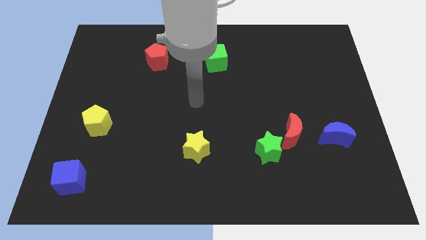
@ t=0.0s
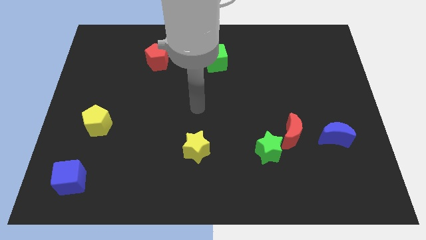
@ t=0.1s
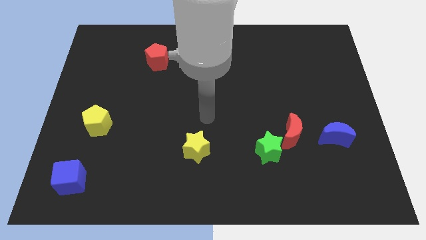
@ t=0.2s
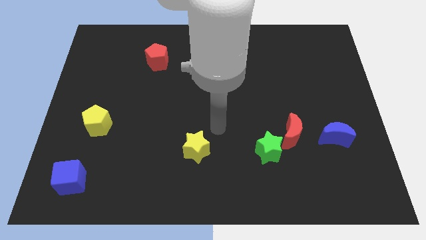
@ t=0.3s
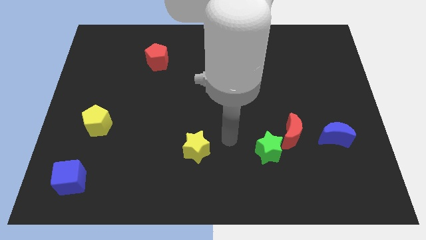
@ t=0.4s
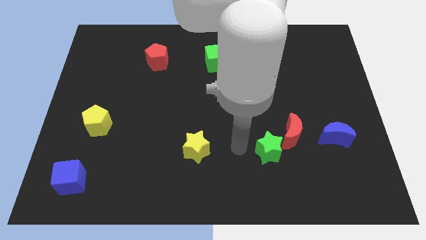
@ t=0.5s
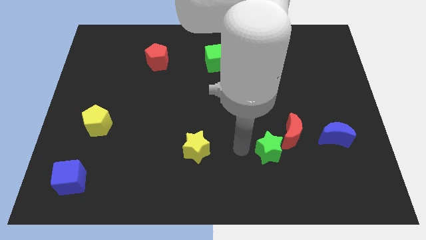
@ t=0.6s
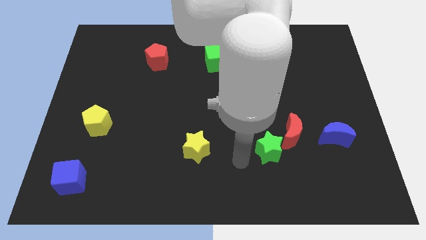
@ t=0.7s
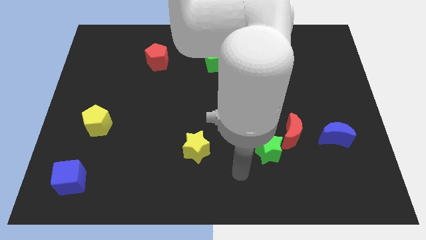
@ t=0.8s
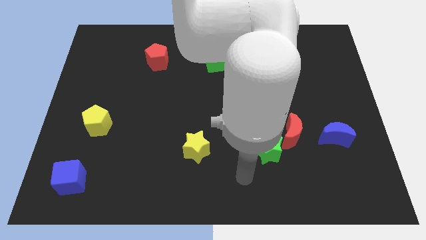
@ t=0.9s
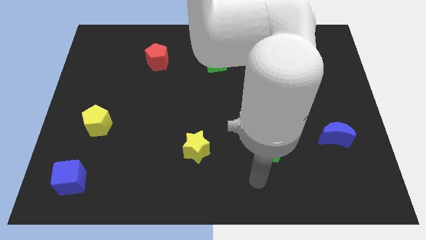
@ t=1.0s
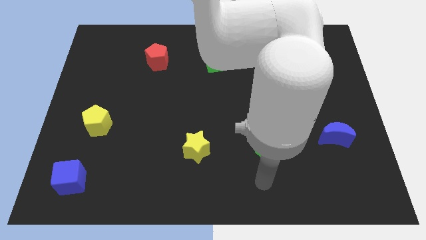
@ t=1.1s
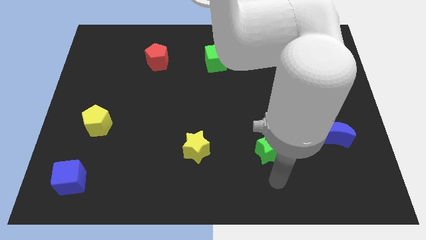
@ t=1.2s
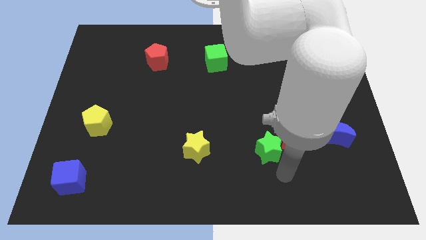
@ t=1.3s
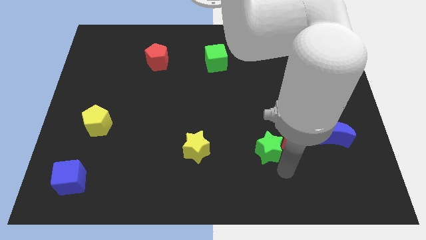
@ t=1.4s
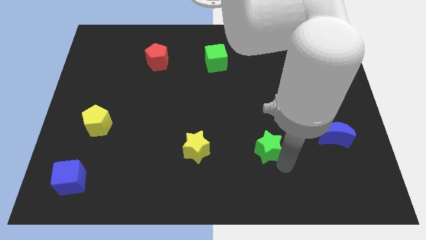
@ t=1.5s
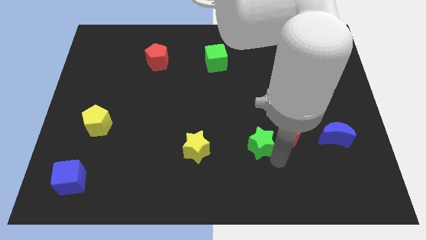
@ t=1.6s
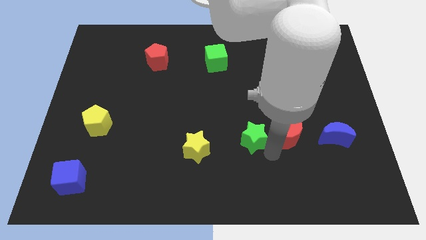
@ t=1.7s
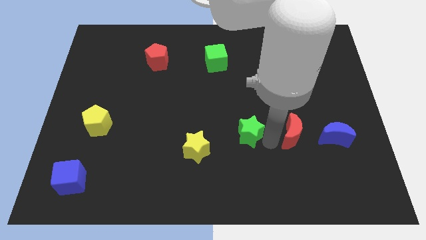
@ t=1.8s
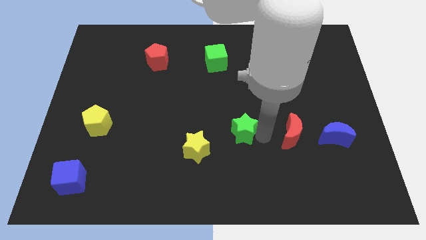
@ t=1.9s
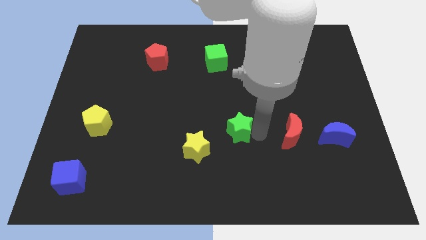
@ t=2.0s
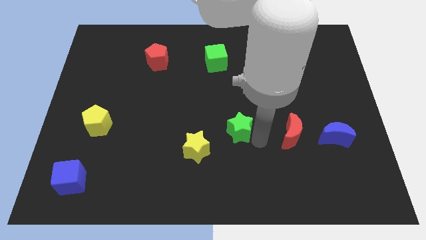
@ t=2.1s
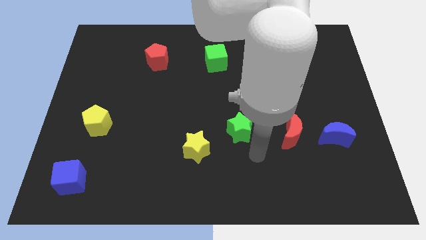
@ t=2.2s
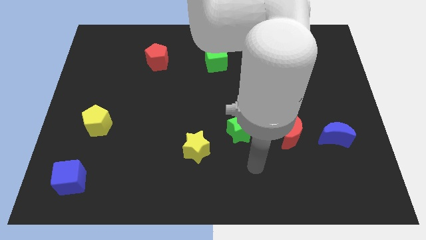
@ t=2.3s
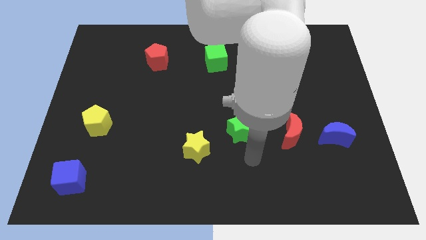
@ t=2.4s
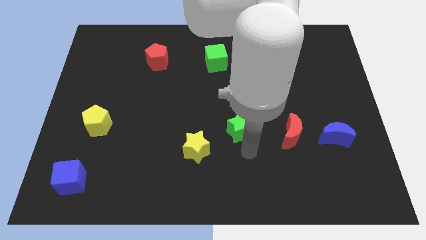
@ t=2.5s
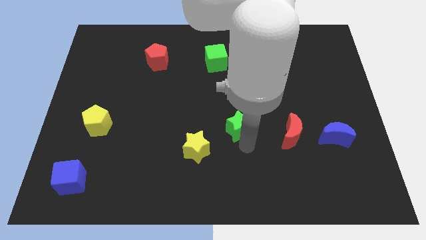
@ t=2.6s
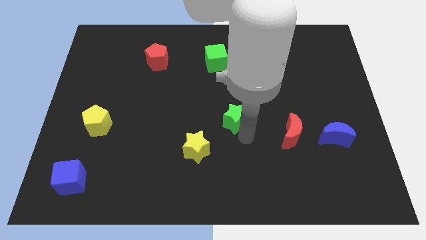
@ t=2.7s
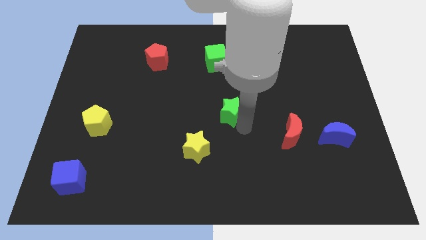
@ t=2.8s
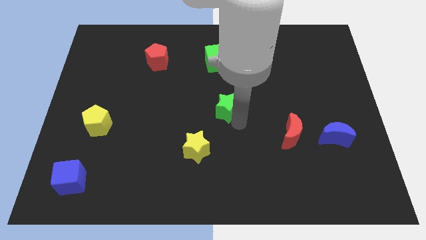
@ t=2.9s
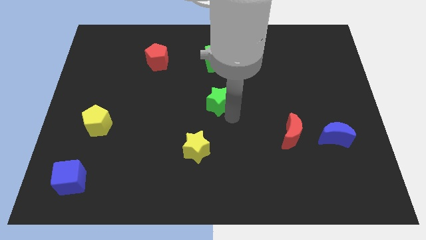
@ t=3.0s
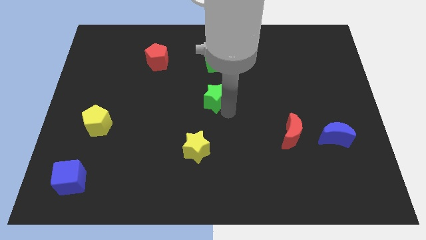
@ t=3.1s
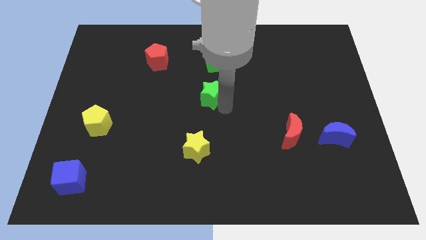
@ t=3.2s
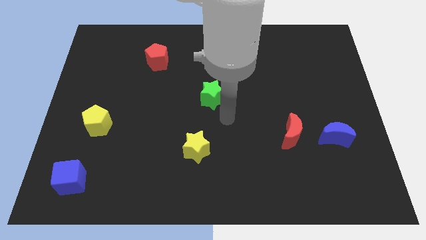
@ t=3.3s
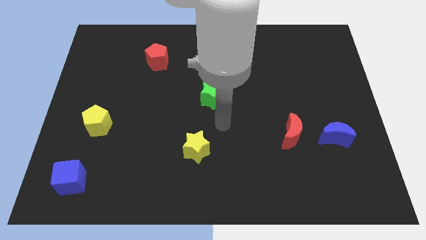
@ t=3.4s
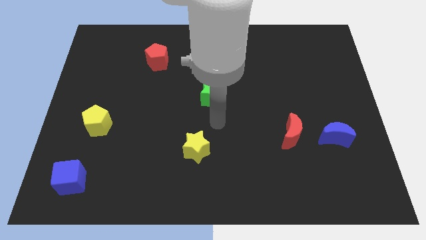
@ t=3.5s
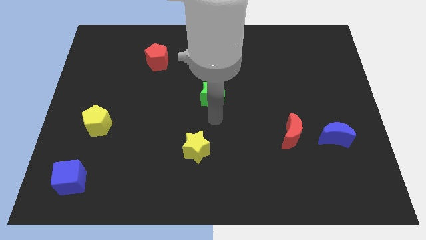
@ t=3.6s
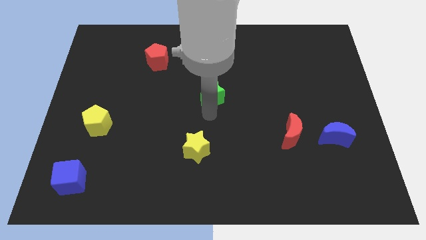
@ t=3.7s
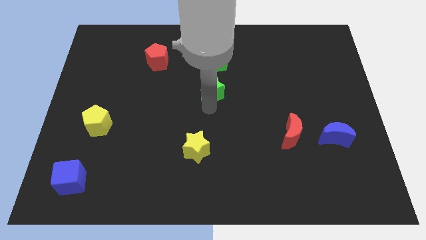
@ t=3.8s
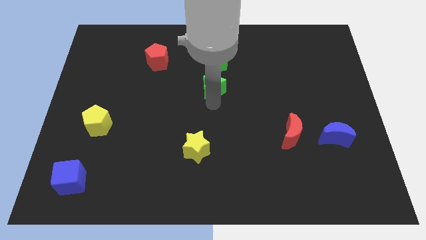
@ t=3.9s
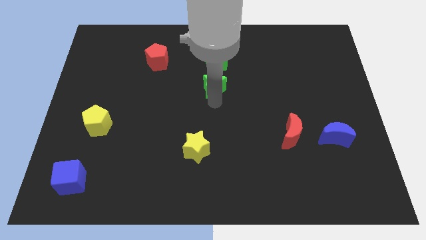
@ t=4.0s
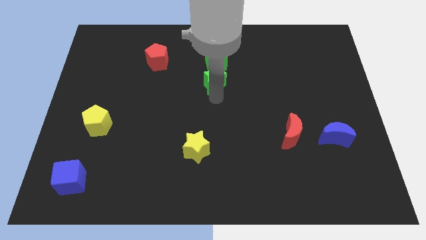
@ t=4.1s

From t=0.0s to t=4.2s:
place the green star below the green cube

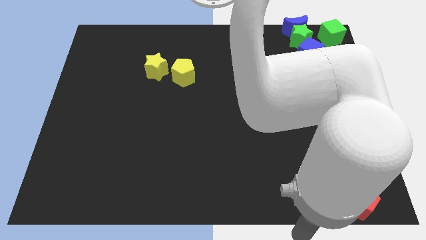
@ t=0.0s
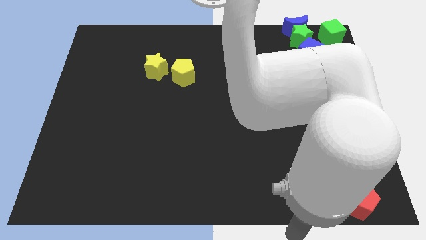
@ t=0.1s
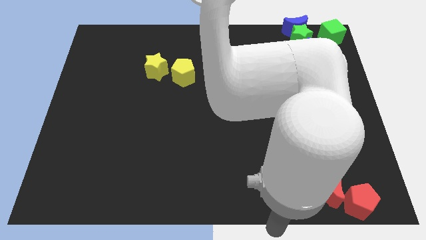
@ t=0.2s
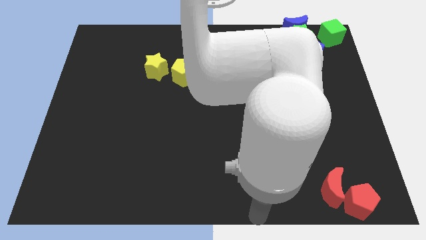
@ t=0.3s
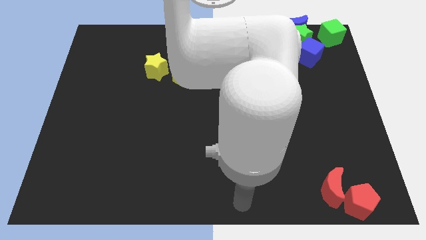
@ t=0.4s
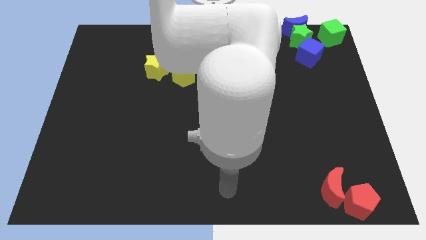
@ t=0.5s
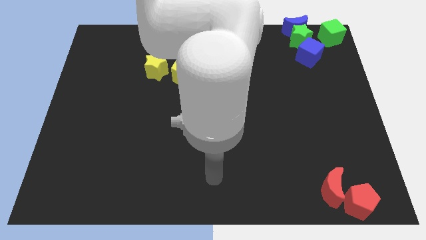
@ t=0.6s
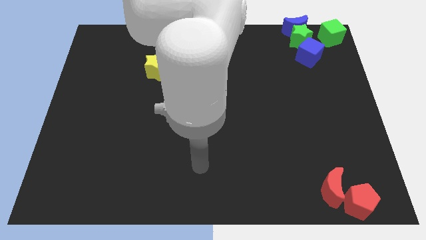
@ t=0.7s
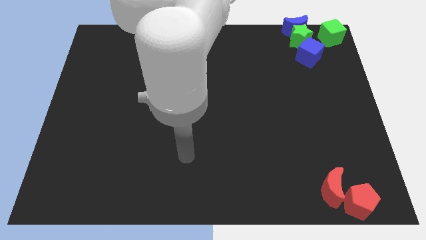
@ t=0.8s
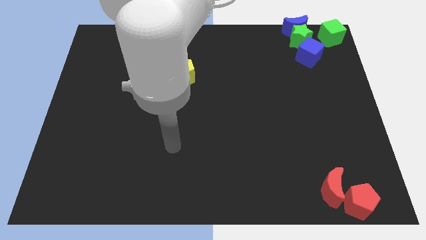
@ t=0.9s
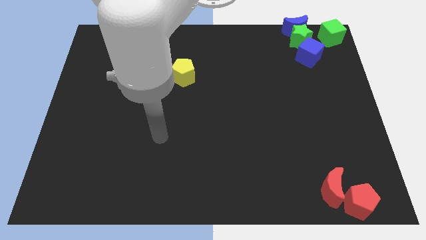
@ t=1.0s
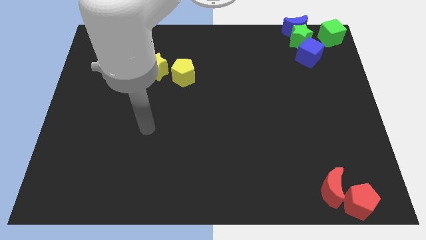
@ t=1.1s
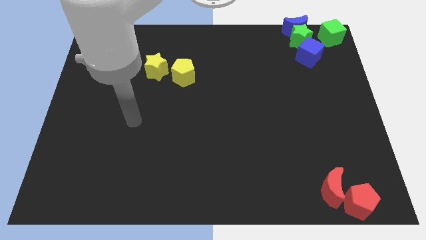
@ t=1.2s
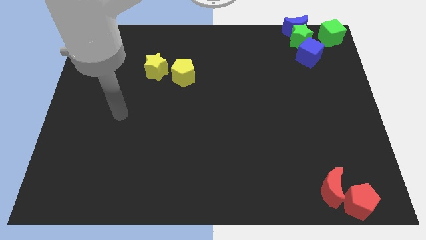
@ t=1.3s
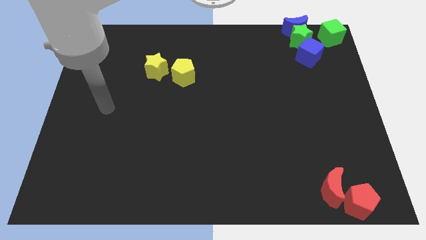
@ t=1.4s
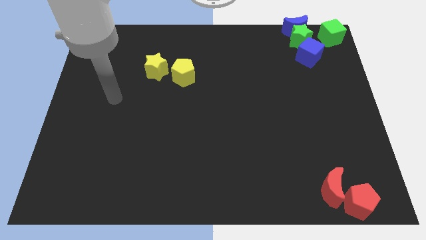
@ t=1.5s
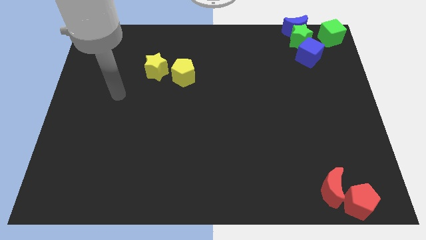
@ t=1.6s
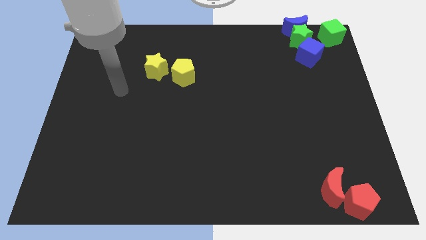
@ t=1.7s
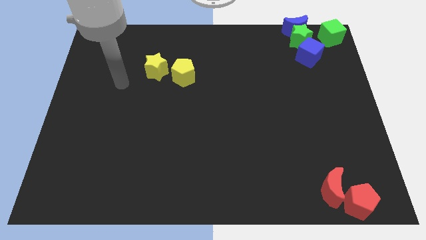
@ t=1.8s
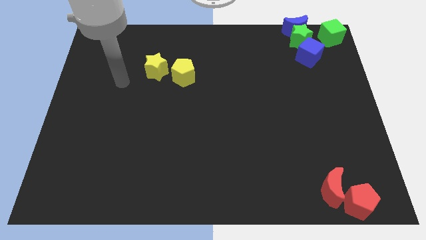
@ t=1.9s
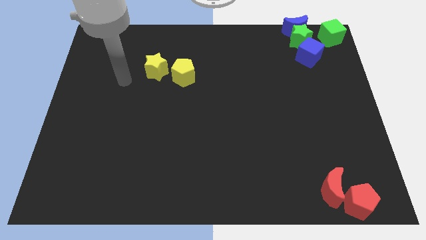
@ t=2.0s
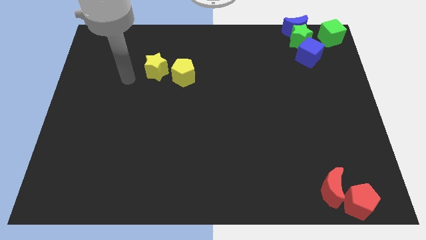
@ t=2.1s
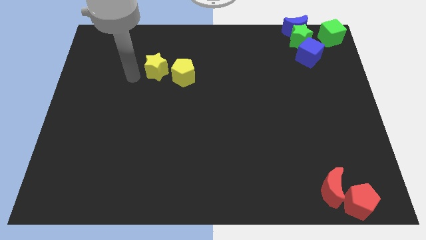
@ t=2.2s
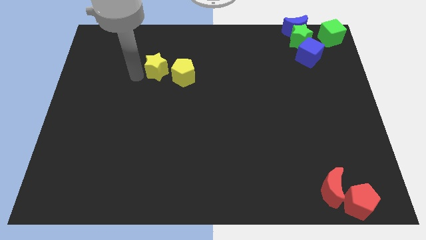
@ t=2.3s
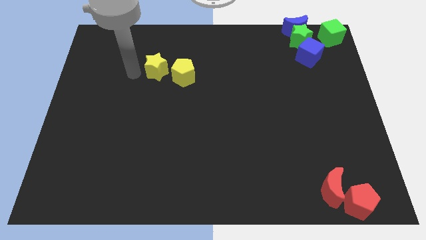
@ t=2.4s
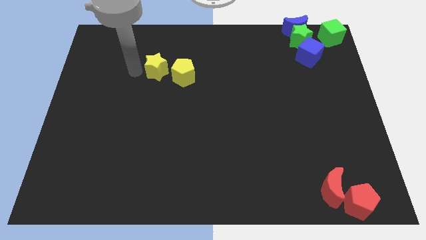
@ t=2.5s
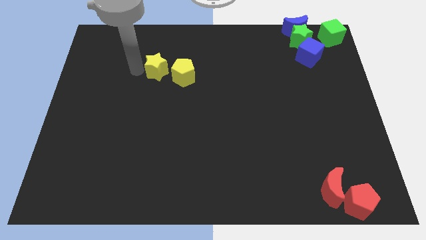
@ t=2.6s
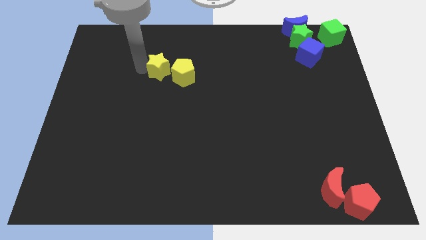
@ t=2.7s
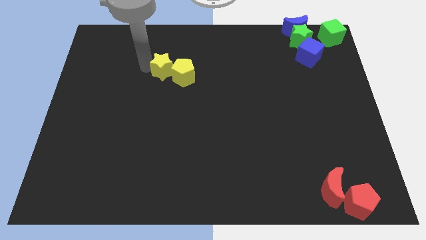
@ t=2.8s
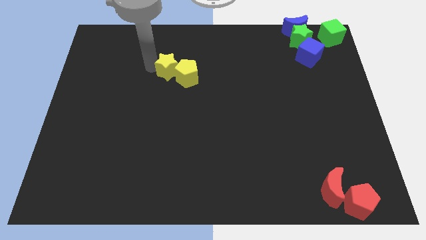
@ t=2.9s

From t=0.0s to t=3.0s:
push the yellow star into the yellow pentagon

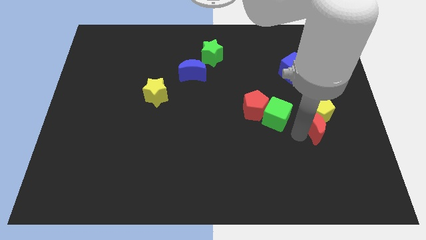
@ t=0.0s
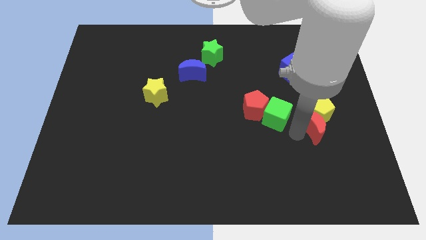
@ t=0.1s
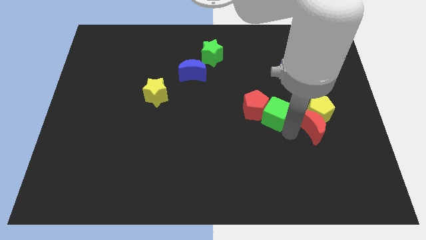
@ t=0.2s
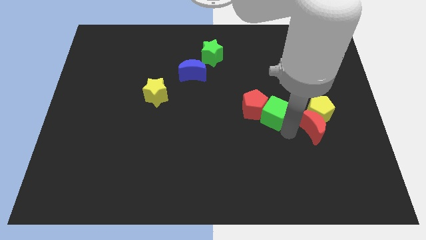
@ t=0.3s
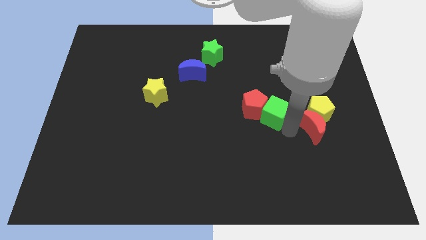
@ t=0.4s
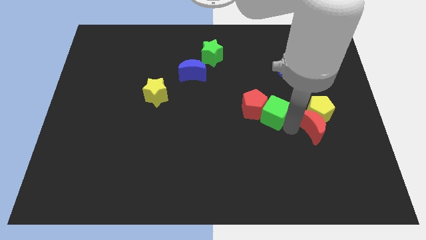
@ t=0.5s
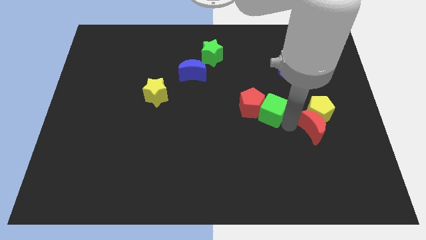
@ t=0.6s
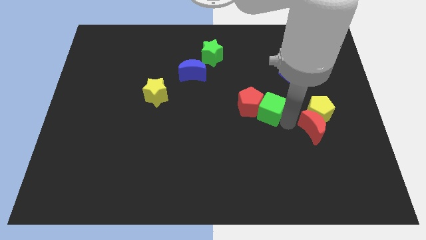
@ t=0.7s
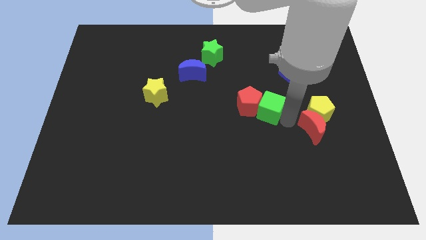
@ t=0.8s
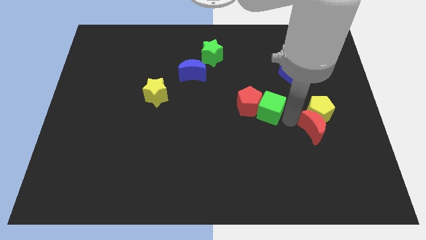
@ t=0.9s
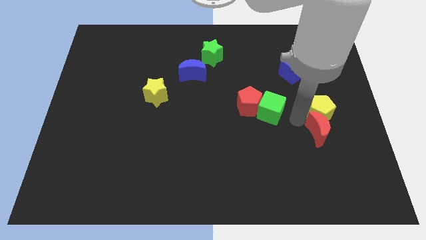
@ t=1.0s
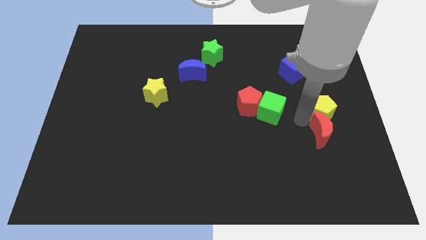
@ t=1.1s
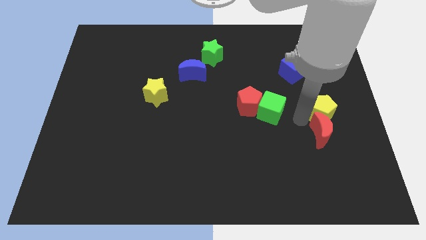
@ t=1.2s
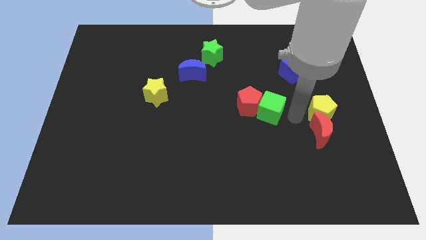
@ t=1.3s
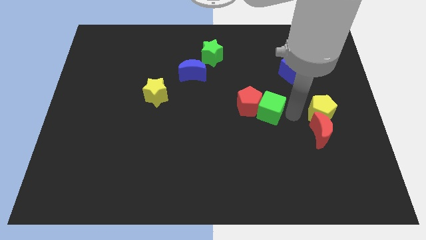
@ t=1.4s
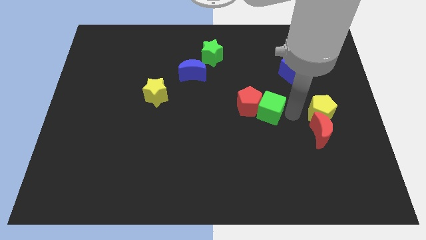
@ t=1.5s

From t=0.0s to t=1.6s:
push the green cubered pentagon towards the center of the board
